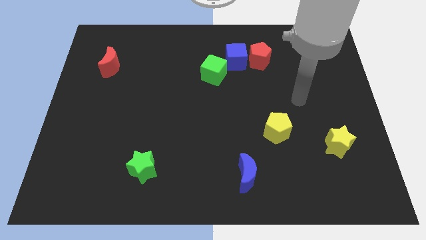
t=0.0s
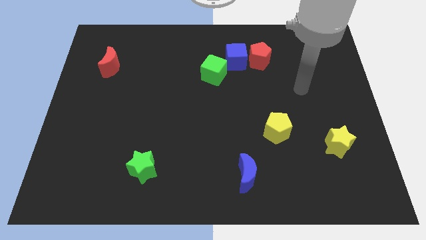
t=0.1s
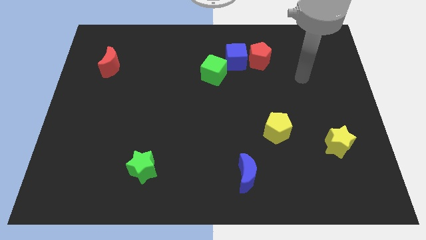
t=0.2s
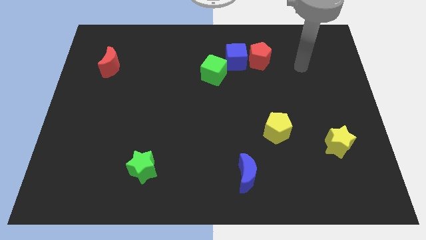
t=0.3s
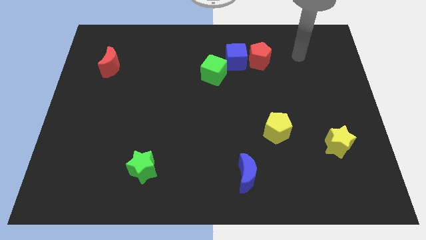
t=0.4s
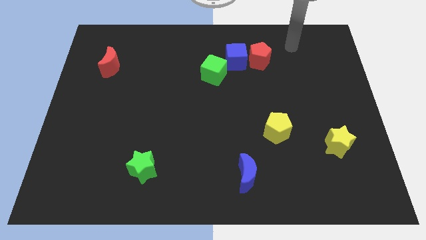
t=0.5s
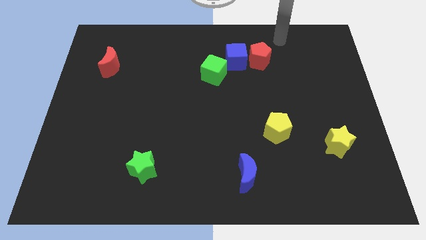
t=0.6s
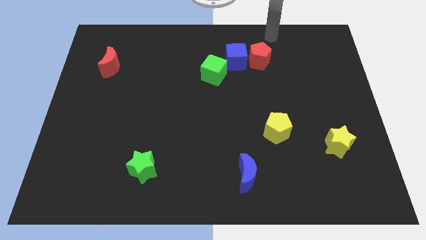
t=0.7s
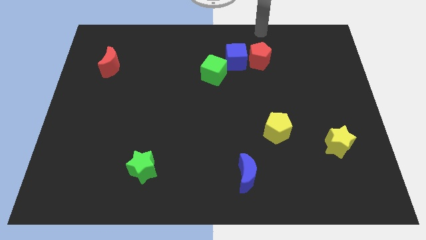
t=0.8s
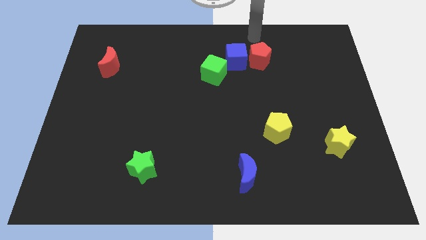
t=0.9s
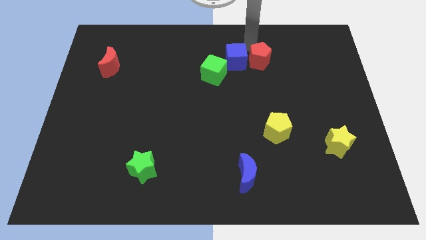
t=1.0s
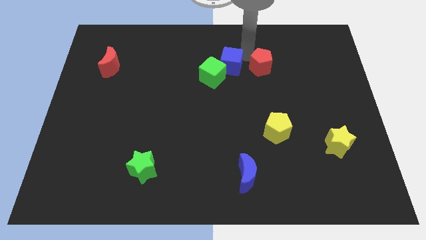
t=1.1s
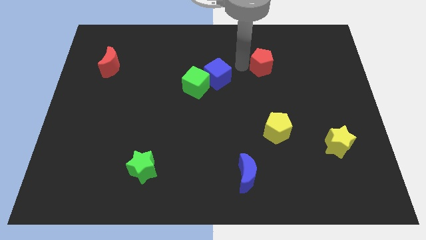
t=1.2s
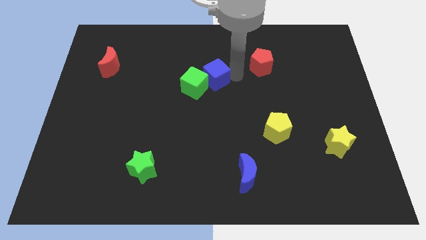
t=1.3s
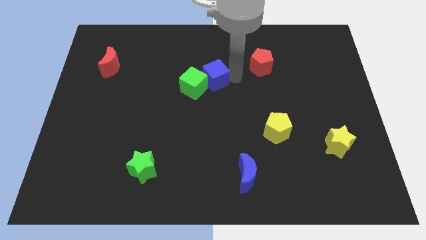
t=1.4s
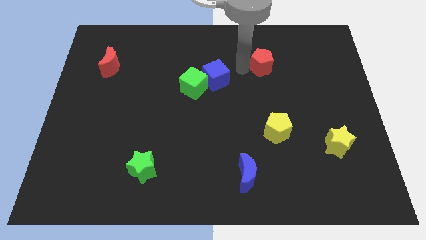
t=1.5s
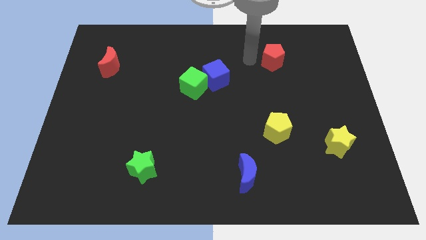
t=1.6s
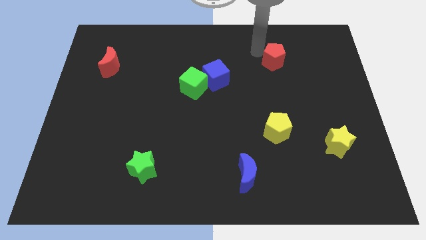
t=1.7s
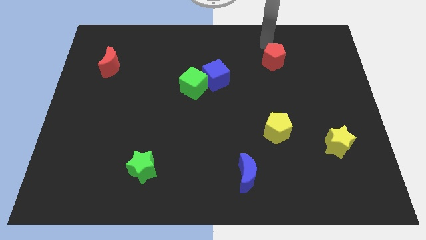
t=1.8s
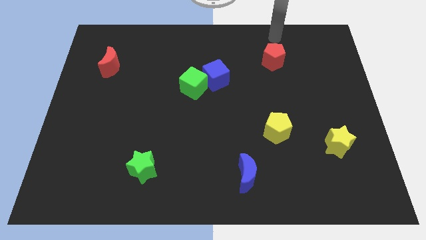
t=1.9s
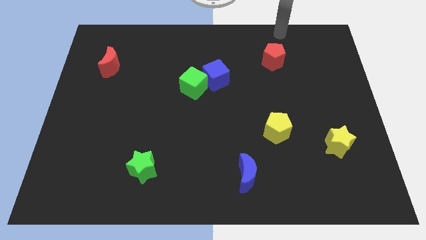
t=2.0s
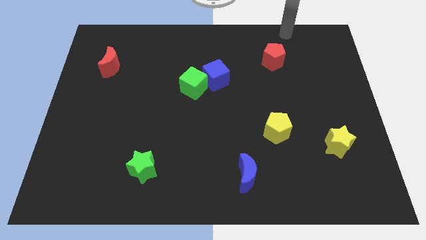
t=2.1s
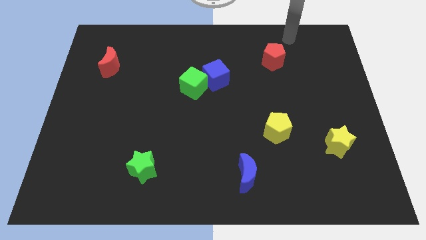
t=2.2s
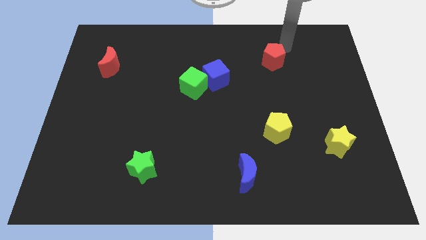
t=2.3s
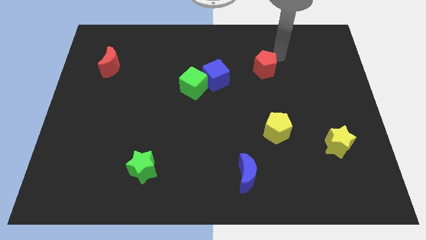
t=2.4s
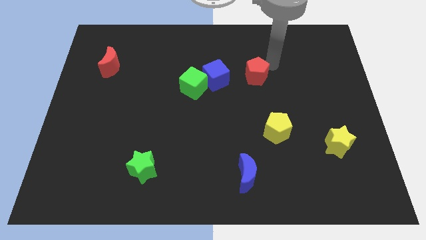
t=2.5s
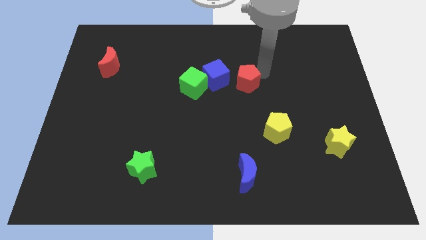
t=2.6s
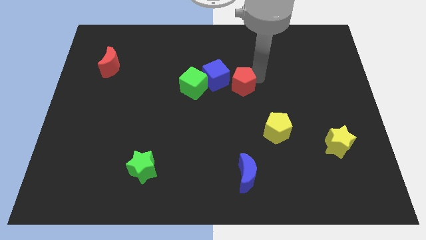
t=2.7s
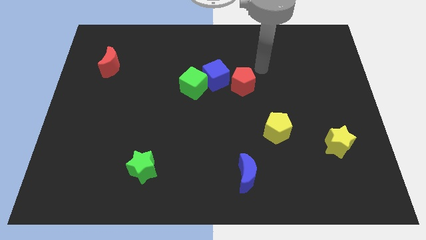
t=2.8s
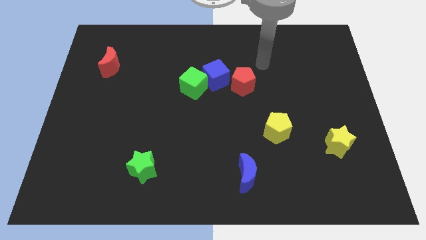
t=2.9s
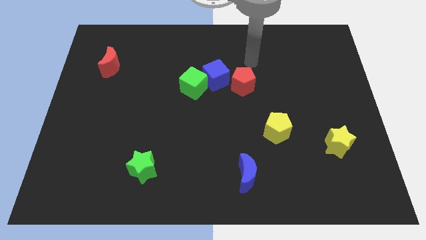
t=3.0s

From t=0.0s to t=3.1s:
push the red pentagon to the right side of the blue cube

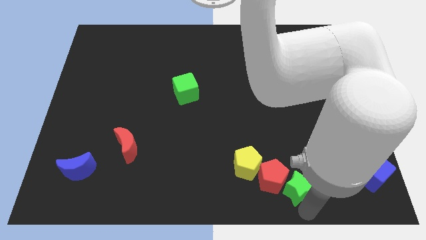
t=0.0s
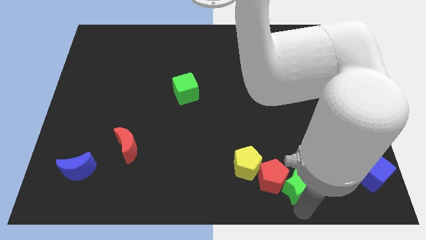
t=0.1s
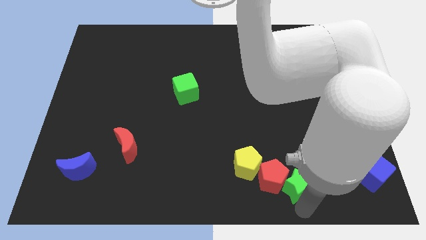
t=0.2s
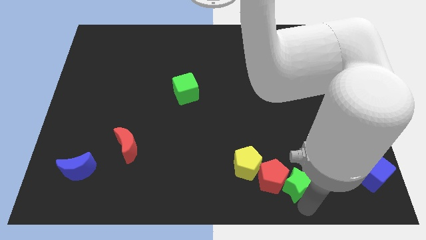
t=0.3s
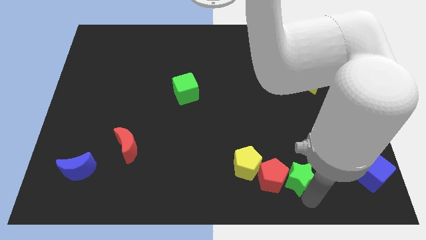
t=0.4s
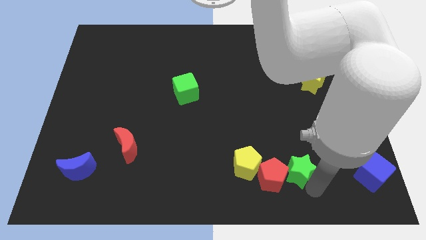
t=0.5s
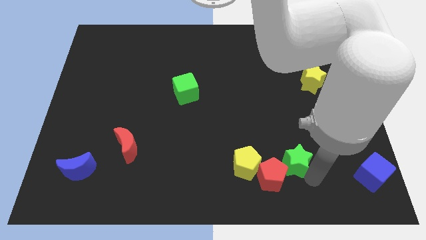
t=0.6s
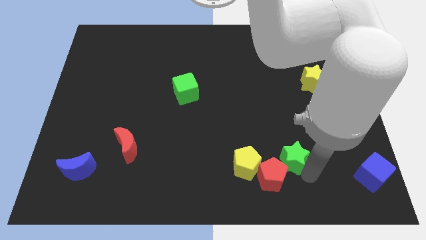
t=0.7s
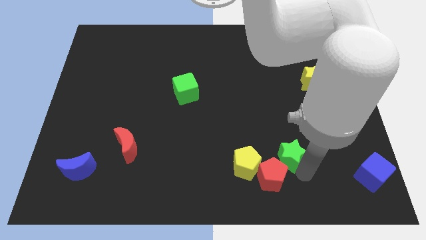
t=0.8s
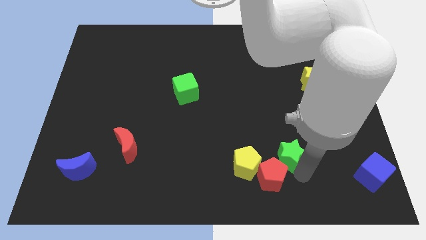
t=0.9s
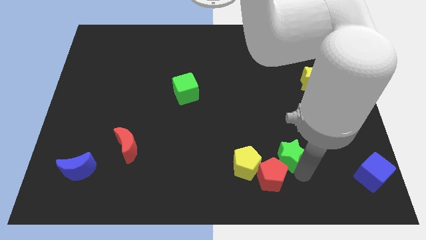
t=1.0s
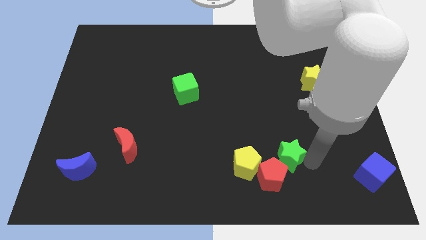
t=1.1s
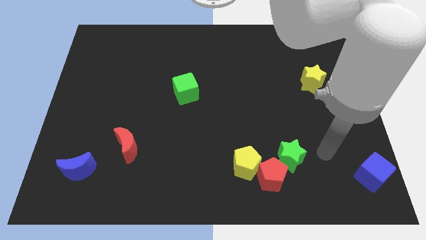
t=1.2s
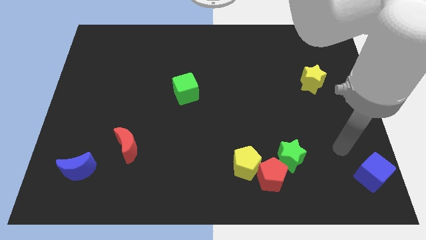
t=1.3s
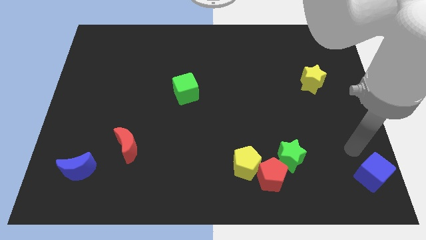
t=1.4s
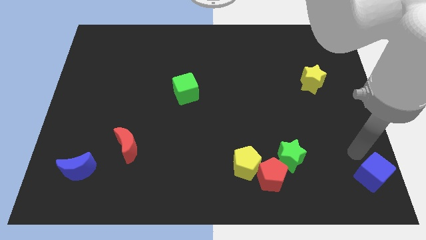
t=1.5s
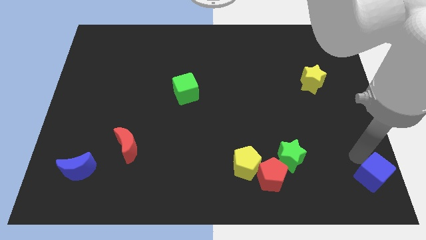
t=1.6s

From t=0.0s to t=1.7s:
place your arm on the top of blue cube

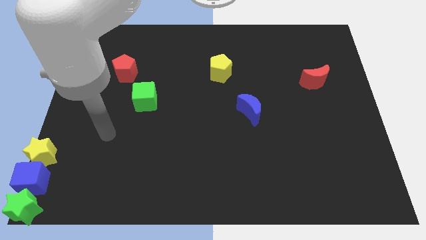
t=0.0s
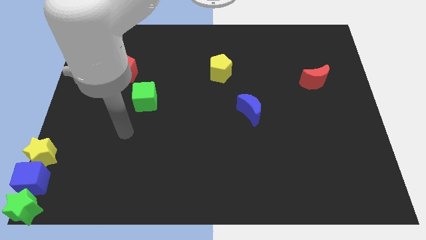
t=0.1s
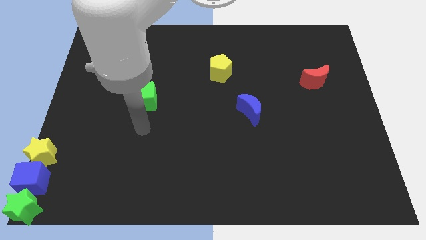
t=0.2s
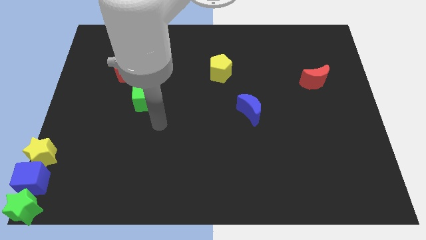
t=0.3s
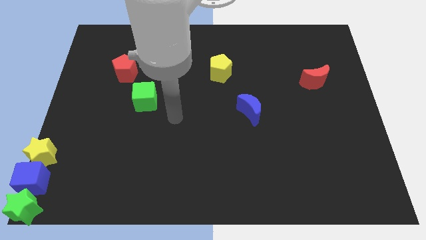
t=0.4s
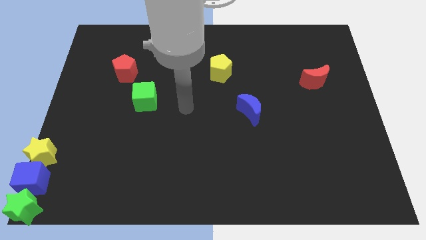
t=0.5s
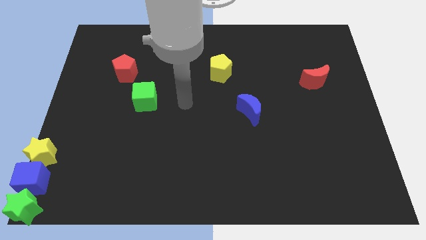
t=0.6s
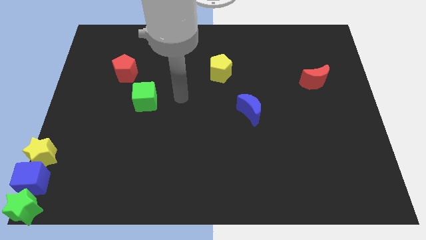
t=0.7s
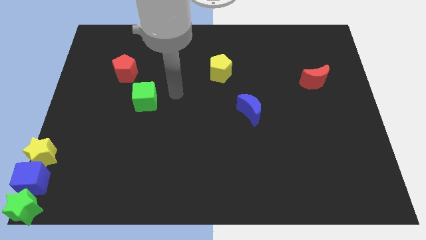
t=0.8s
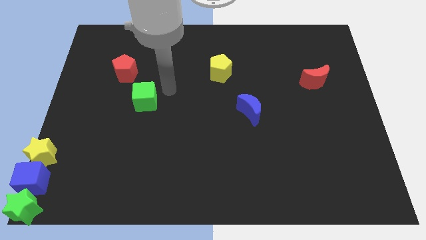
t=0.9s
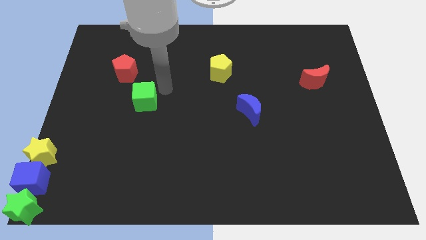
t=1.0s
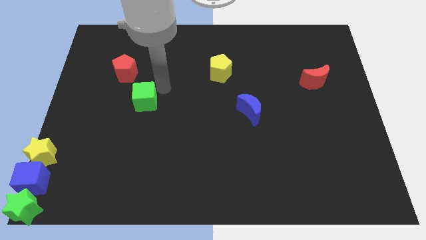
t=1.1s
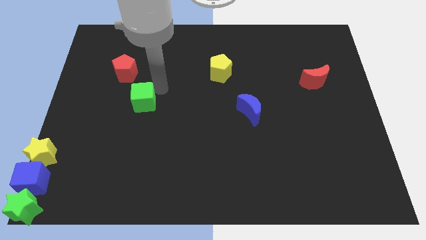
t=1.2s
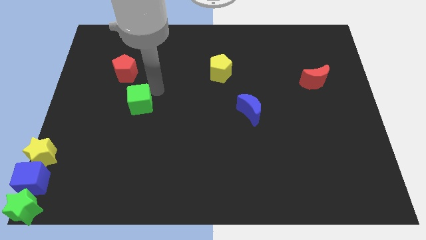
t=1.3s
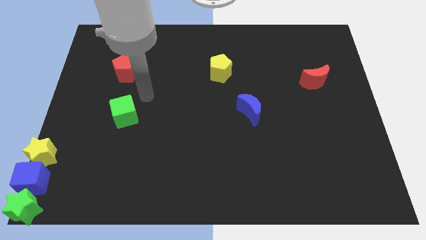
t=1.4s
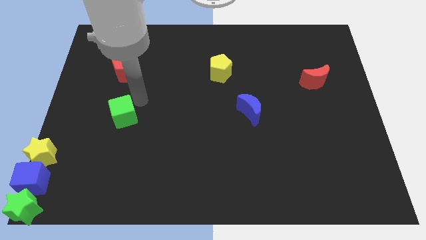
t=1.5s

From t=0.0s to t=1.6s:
place green cube to the bottom of red pentagon

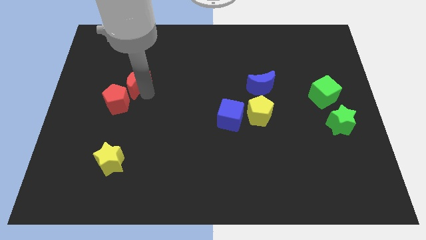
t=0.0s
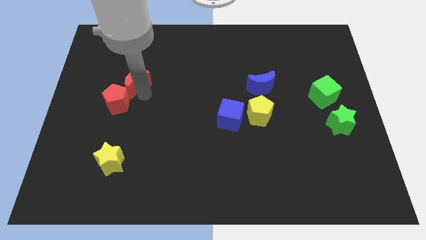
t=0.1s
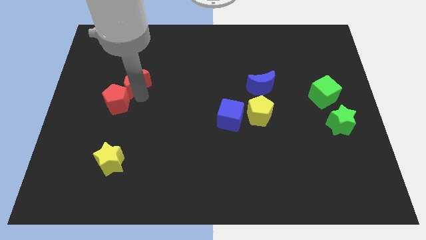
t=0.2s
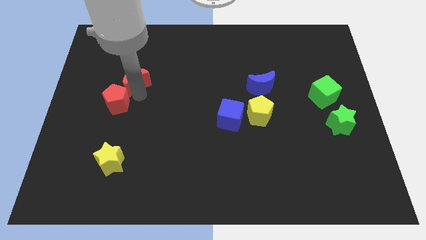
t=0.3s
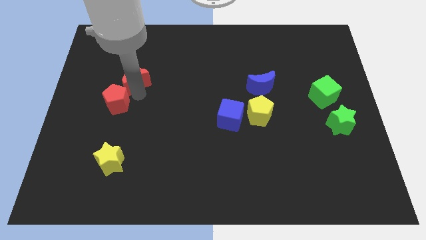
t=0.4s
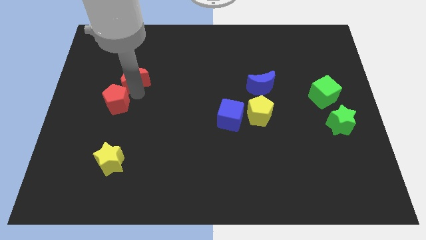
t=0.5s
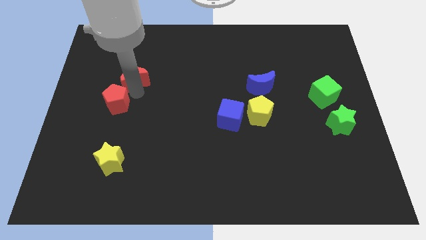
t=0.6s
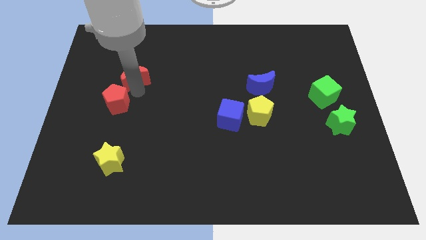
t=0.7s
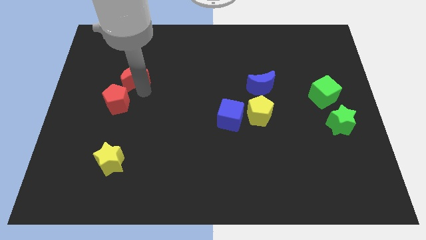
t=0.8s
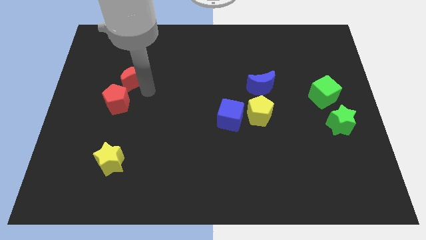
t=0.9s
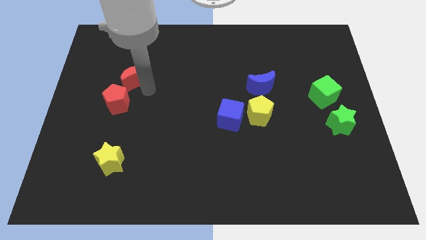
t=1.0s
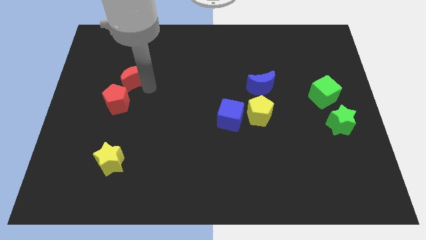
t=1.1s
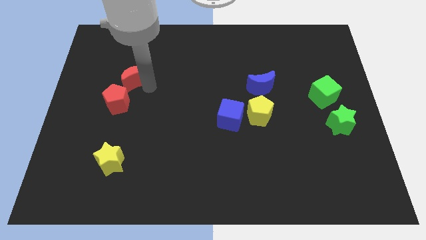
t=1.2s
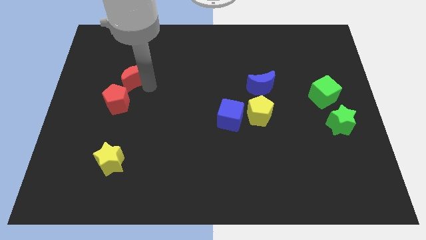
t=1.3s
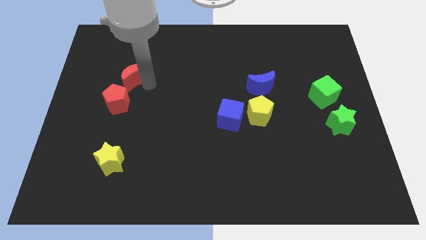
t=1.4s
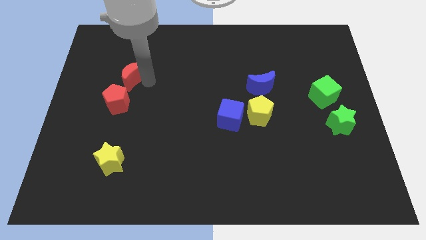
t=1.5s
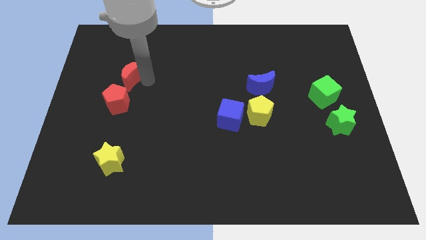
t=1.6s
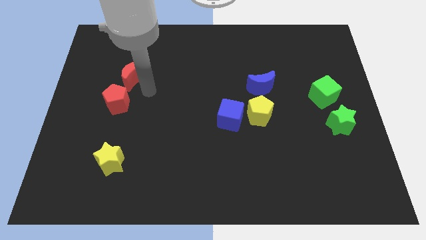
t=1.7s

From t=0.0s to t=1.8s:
place the red crescent above the red pentagon

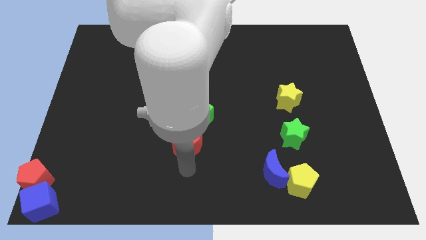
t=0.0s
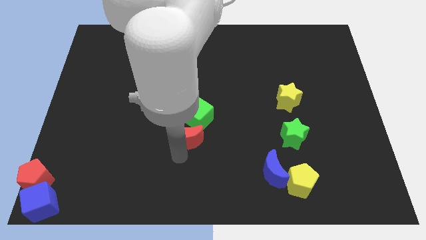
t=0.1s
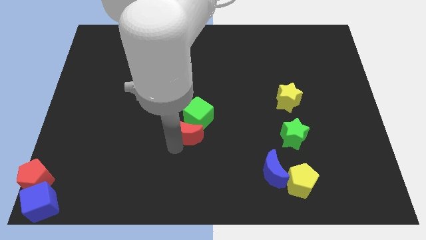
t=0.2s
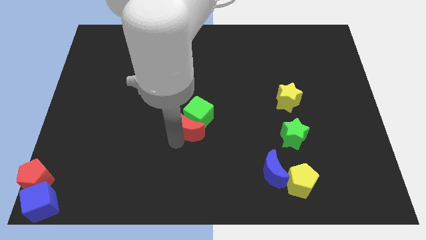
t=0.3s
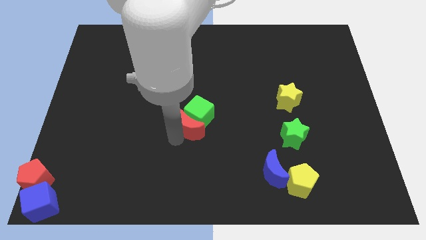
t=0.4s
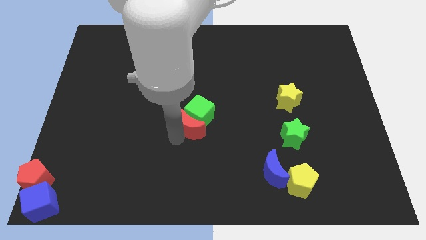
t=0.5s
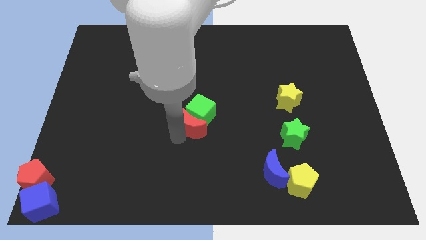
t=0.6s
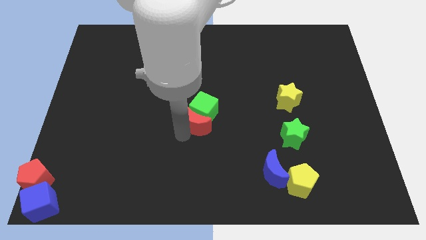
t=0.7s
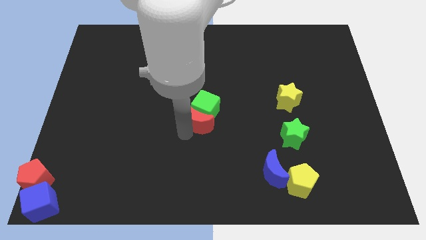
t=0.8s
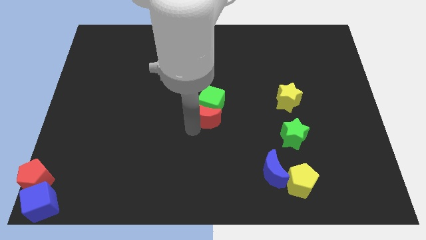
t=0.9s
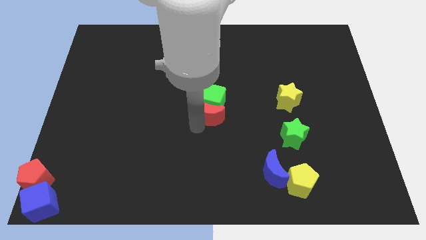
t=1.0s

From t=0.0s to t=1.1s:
push the red moon into the green cube
